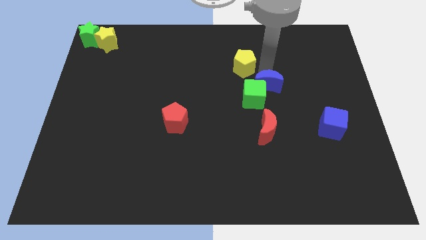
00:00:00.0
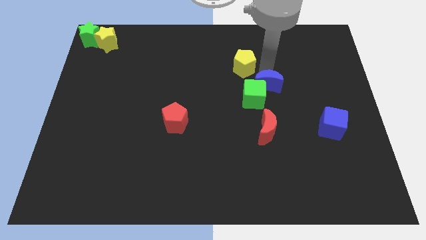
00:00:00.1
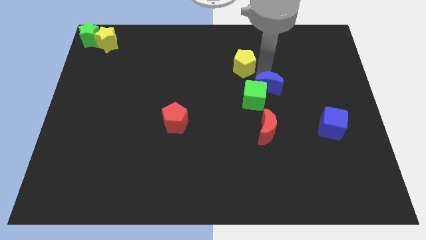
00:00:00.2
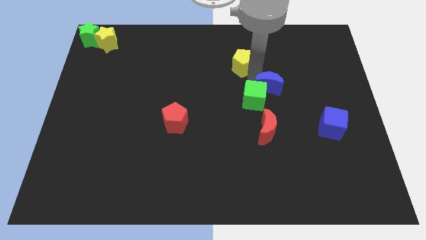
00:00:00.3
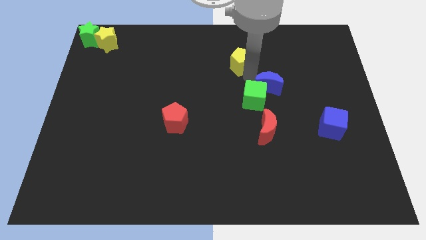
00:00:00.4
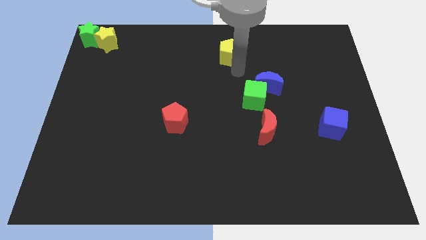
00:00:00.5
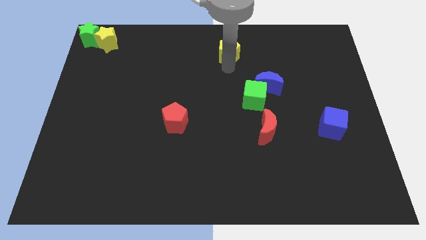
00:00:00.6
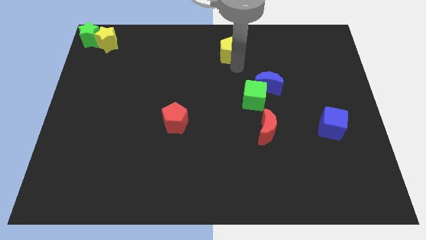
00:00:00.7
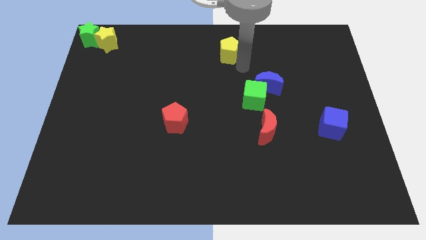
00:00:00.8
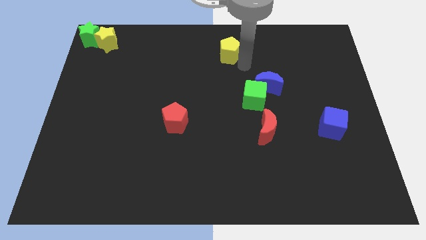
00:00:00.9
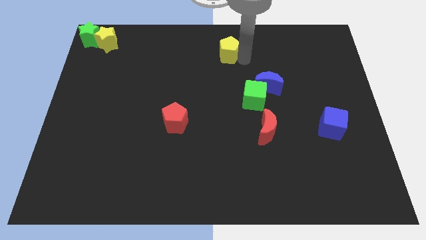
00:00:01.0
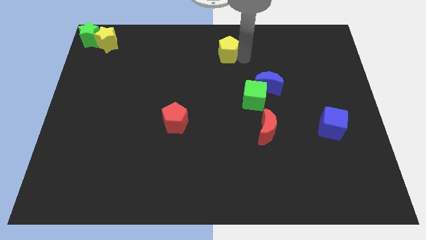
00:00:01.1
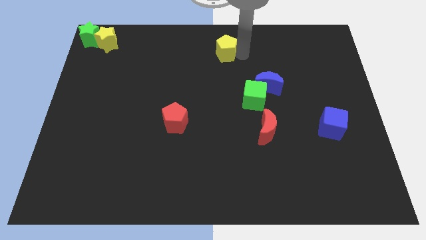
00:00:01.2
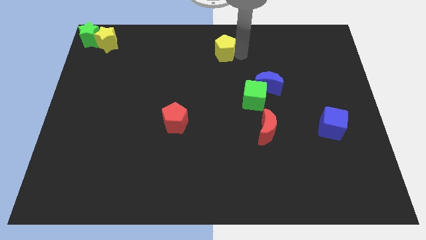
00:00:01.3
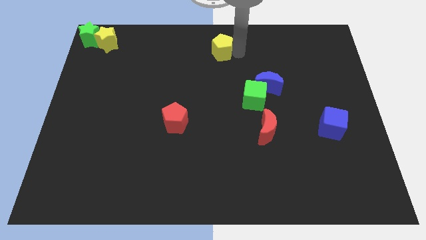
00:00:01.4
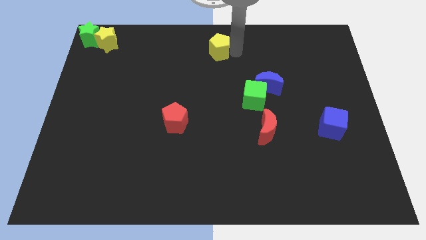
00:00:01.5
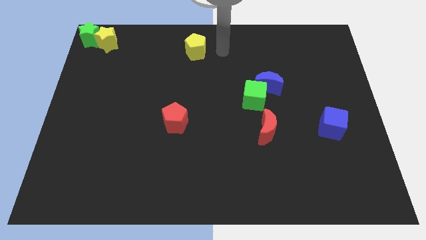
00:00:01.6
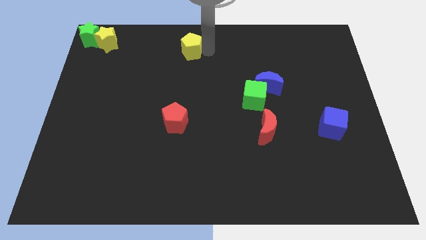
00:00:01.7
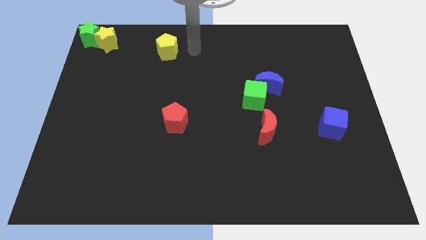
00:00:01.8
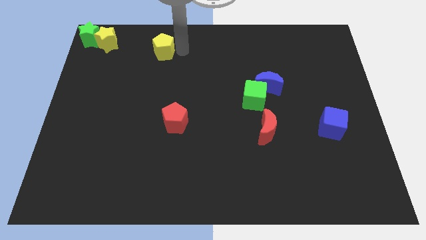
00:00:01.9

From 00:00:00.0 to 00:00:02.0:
push the yellow pentagon parallel to the yellow star

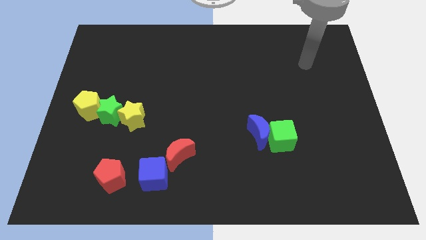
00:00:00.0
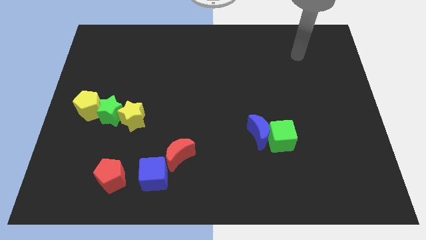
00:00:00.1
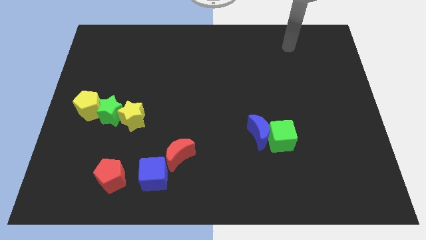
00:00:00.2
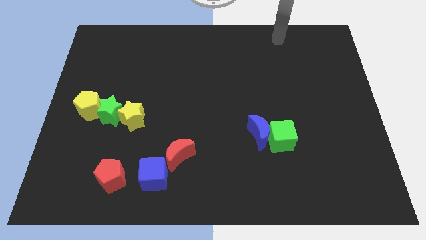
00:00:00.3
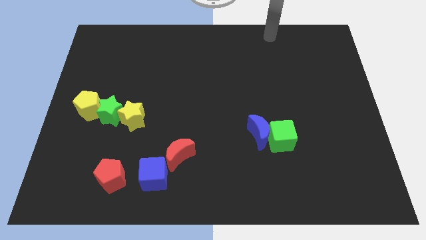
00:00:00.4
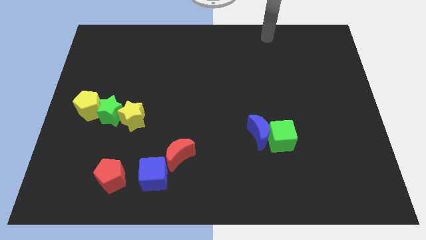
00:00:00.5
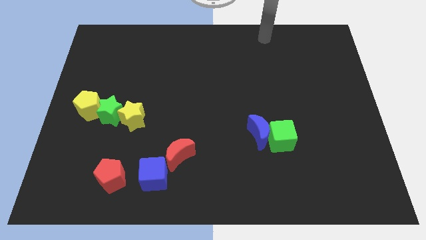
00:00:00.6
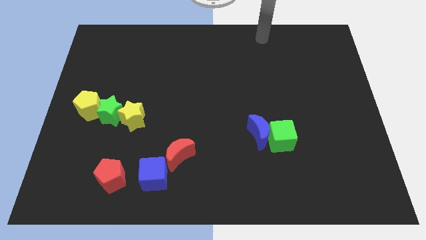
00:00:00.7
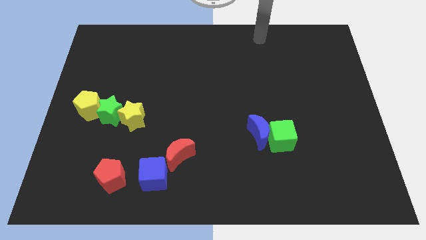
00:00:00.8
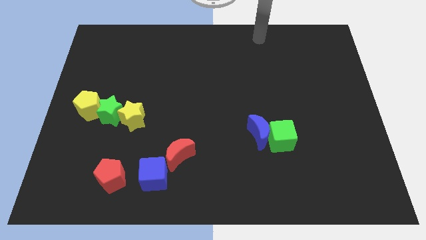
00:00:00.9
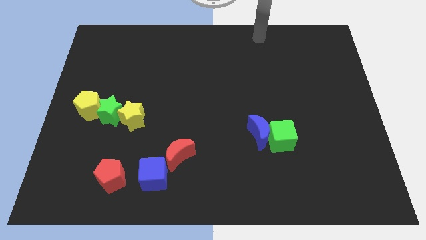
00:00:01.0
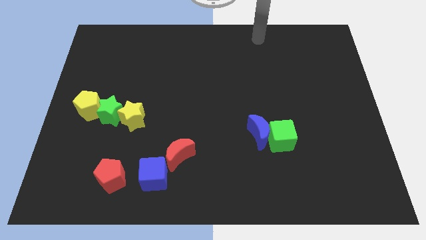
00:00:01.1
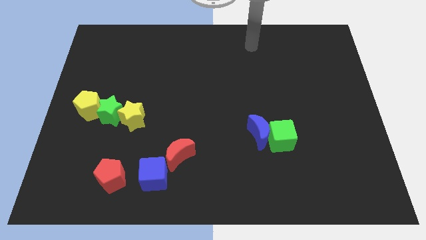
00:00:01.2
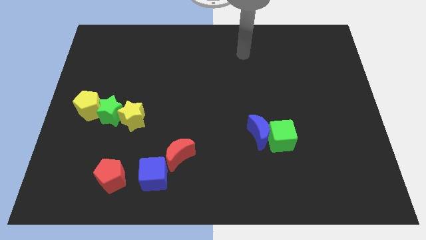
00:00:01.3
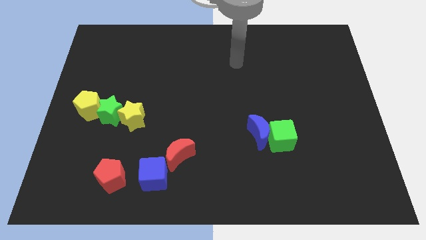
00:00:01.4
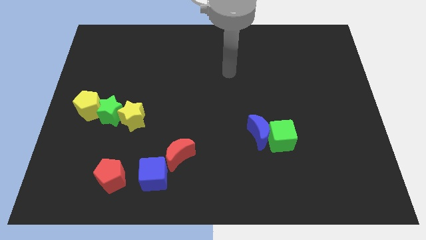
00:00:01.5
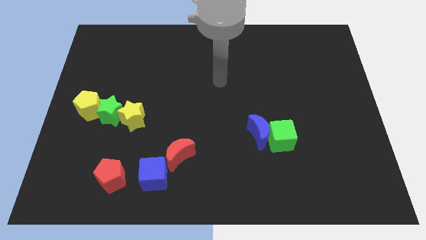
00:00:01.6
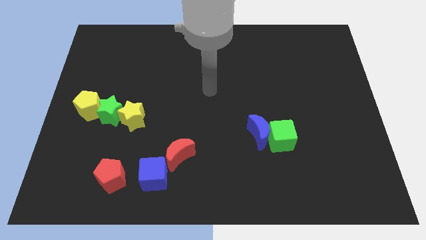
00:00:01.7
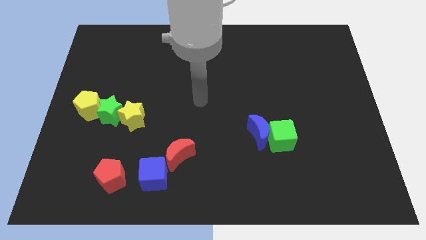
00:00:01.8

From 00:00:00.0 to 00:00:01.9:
point your arm at the center of the board

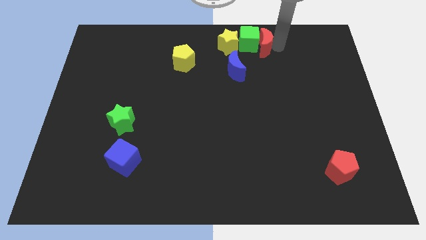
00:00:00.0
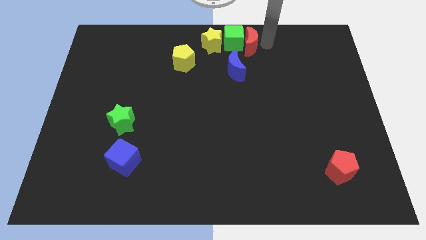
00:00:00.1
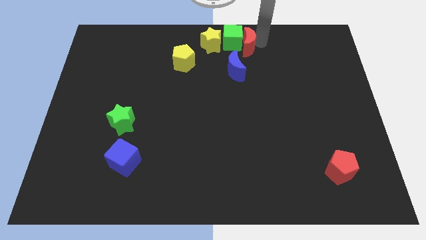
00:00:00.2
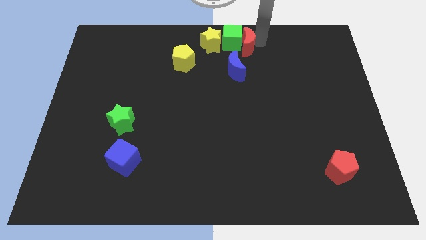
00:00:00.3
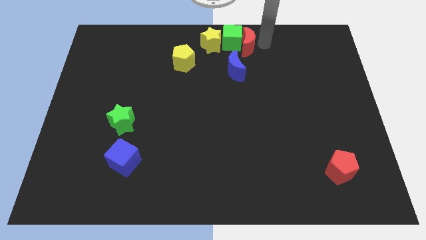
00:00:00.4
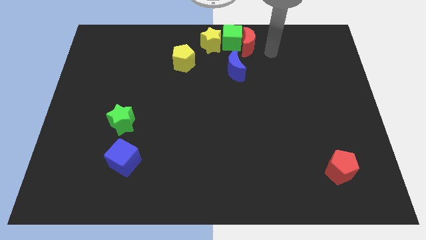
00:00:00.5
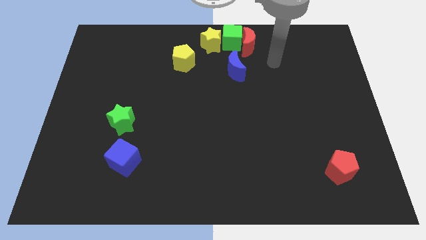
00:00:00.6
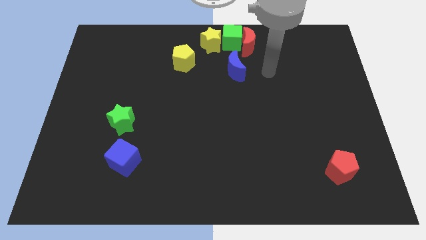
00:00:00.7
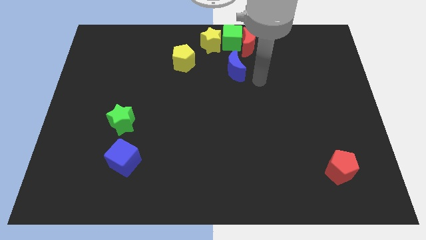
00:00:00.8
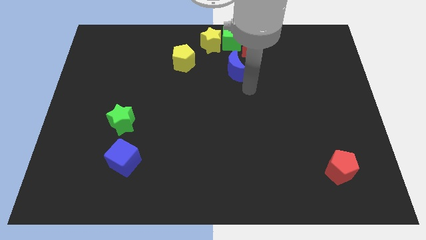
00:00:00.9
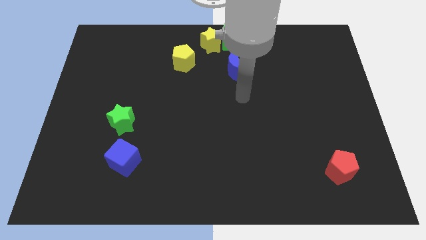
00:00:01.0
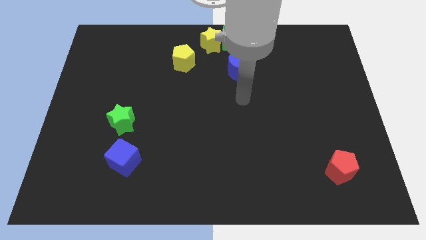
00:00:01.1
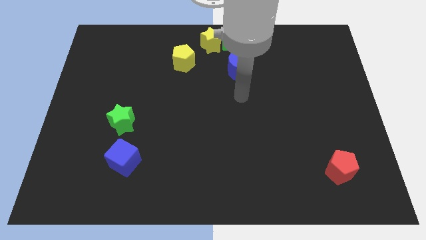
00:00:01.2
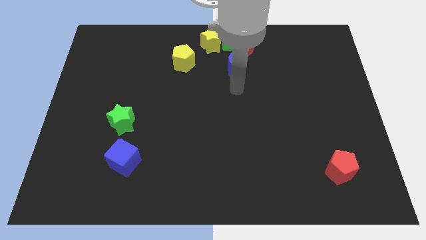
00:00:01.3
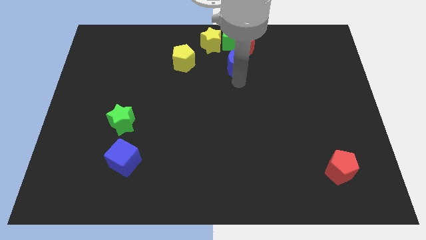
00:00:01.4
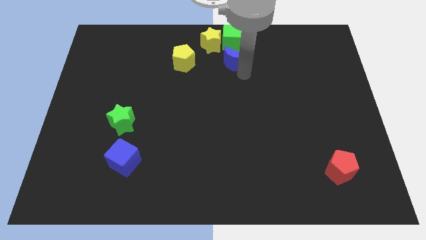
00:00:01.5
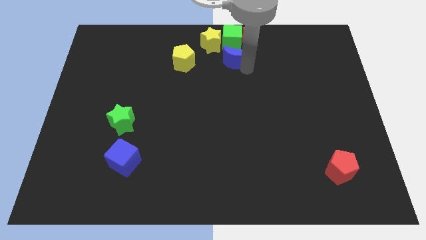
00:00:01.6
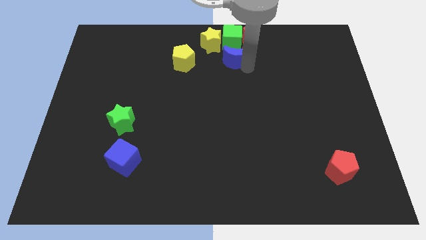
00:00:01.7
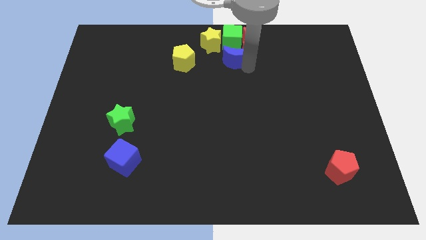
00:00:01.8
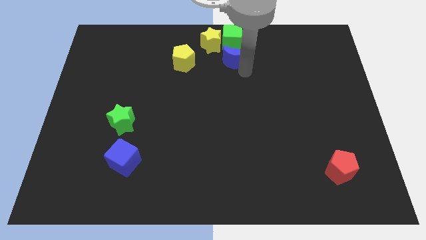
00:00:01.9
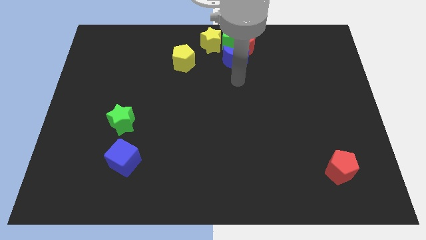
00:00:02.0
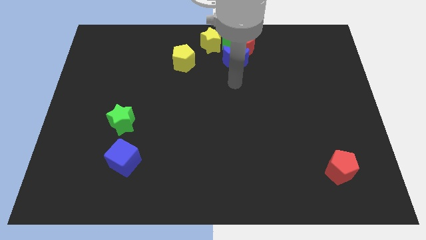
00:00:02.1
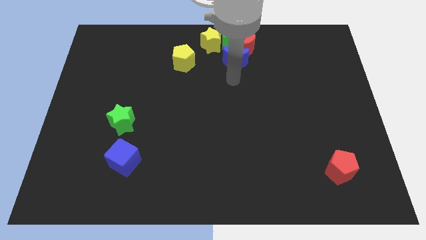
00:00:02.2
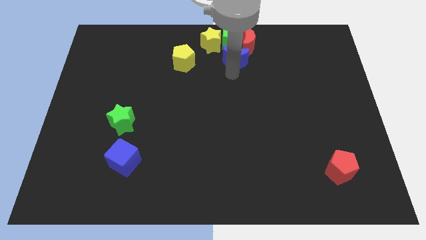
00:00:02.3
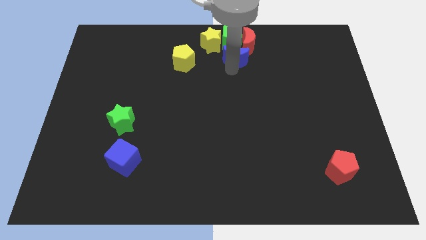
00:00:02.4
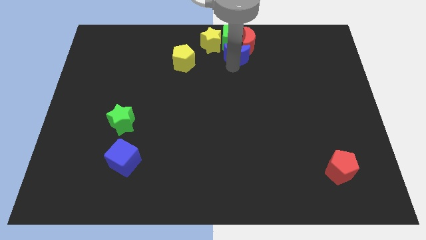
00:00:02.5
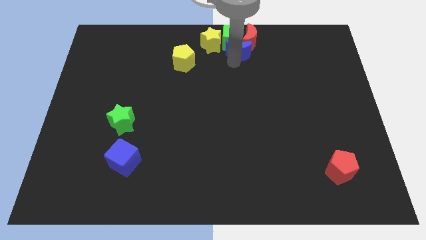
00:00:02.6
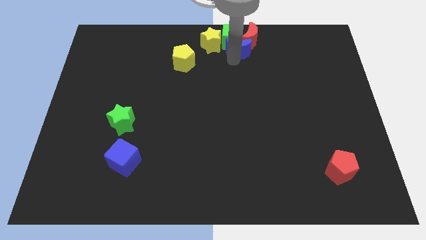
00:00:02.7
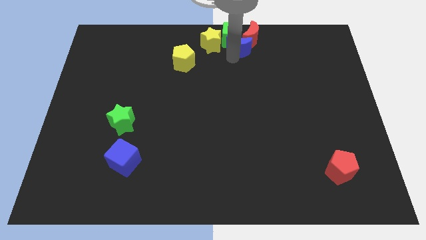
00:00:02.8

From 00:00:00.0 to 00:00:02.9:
move the group of blocks to the top center of the board

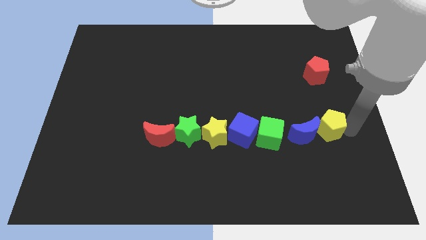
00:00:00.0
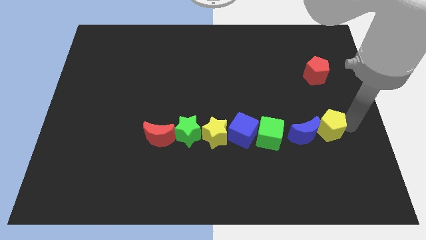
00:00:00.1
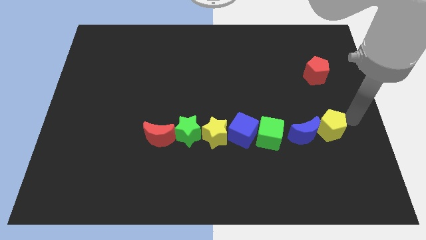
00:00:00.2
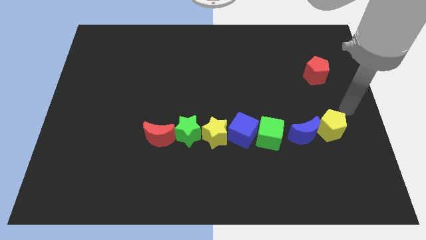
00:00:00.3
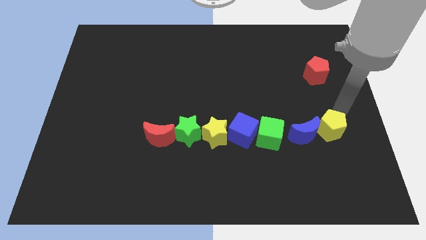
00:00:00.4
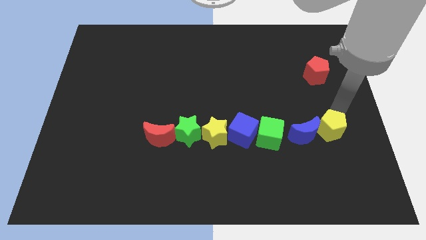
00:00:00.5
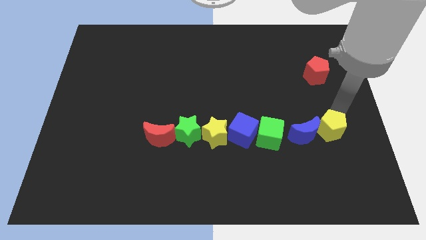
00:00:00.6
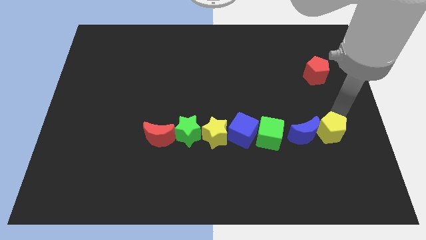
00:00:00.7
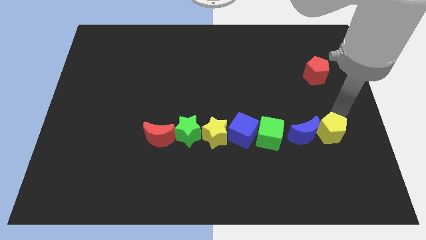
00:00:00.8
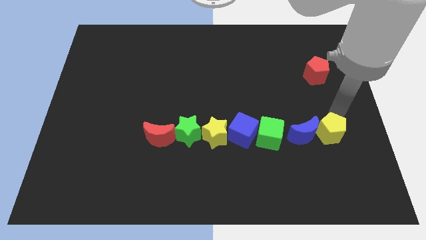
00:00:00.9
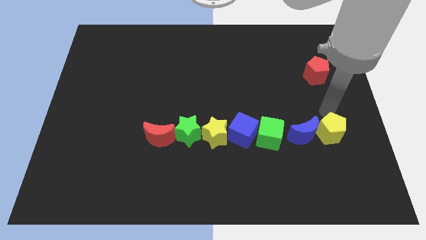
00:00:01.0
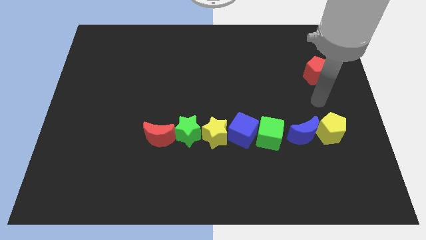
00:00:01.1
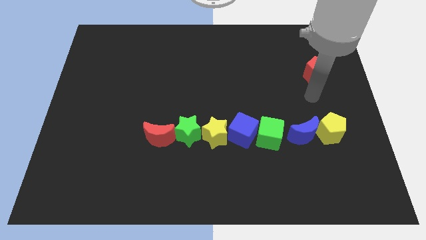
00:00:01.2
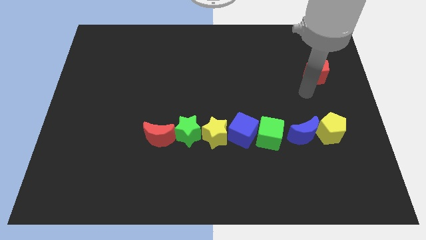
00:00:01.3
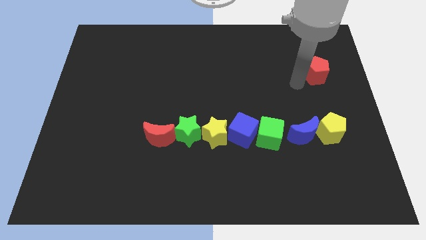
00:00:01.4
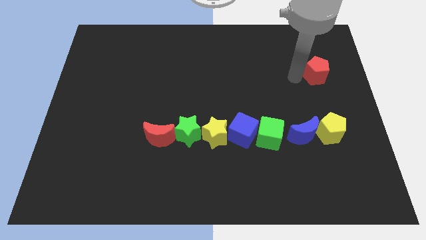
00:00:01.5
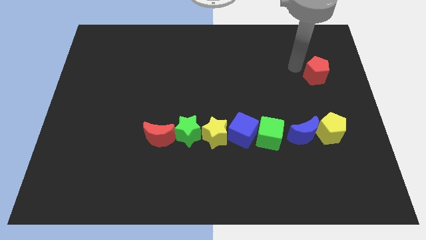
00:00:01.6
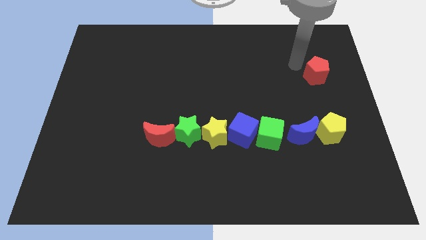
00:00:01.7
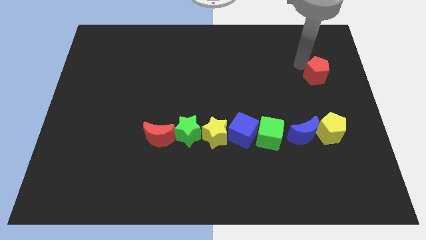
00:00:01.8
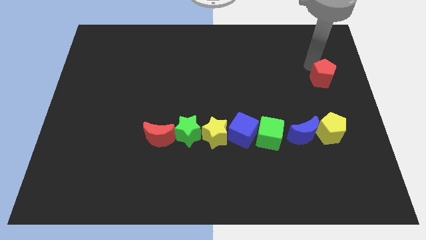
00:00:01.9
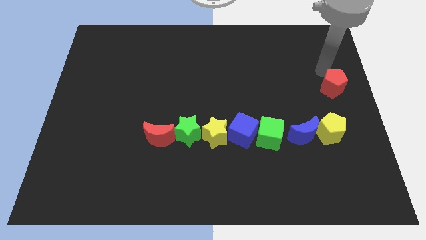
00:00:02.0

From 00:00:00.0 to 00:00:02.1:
adjust the yellow pentagon of the board
